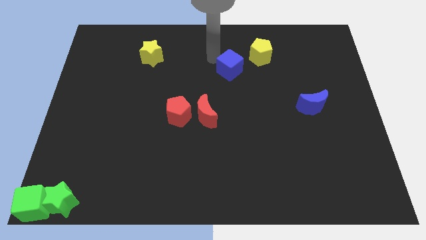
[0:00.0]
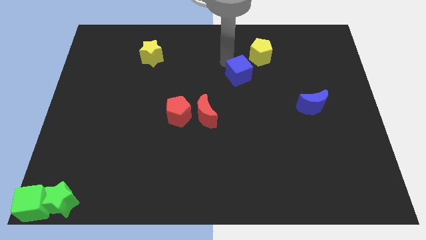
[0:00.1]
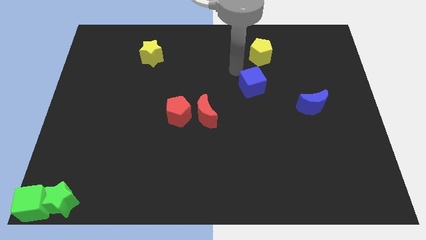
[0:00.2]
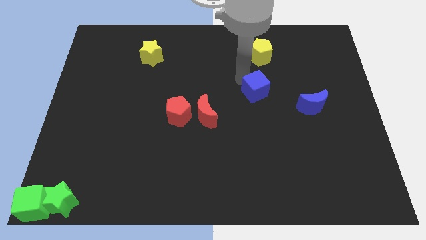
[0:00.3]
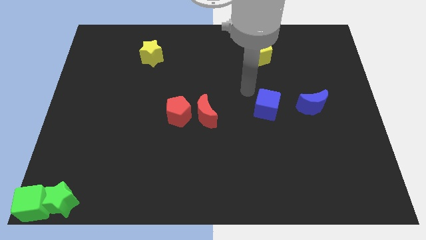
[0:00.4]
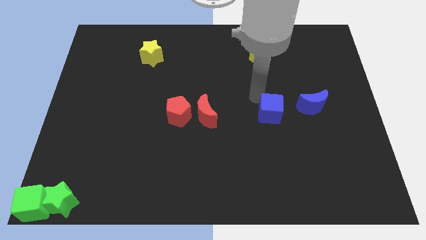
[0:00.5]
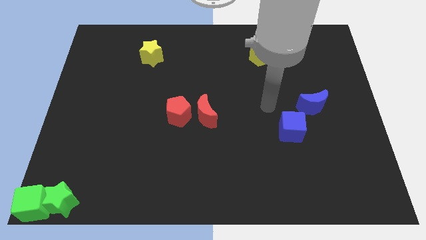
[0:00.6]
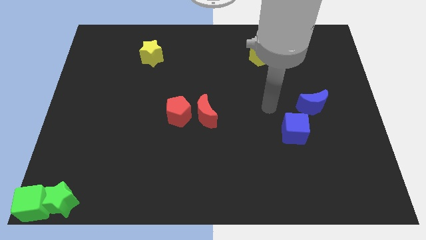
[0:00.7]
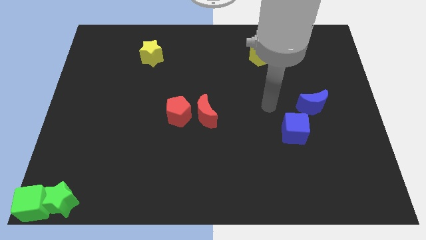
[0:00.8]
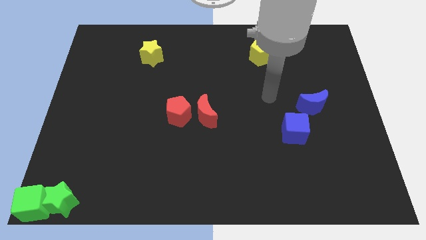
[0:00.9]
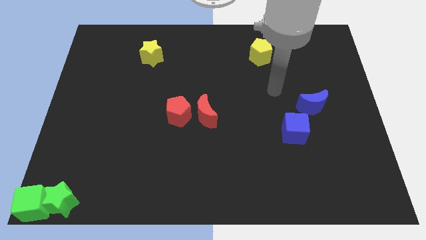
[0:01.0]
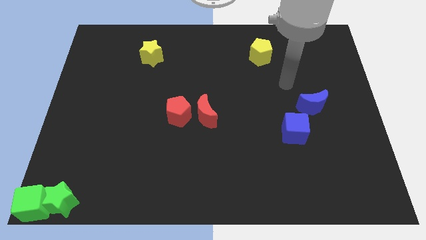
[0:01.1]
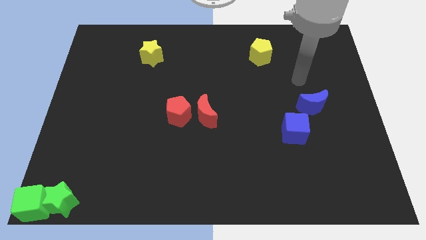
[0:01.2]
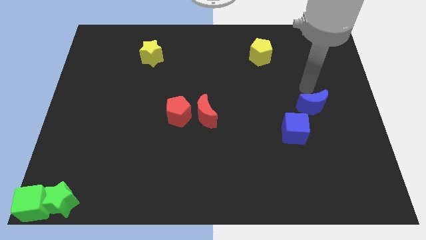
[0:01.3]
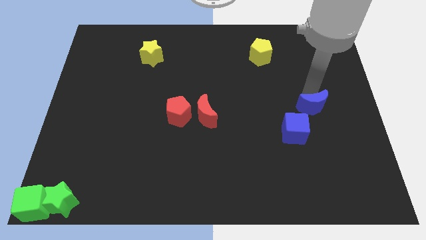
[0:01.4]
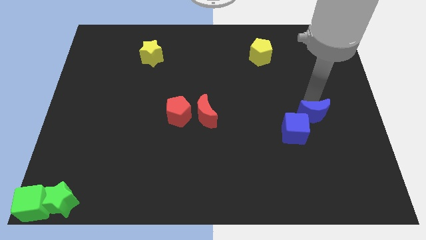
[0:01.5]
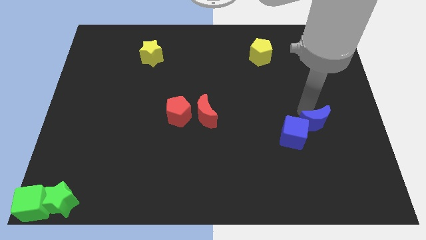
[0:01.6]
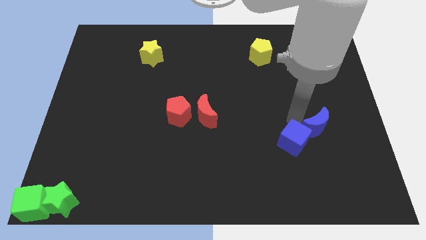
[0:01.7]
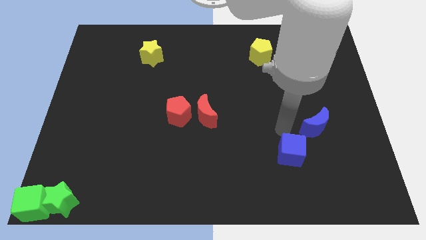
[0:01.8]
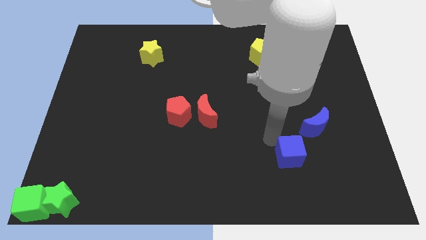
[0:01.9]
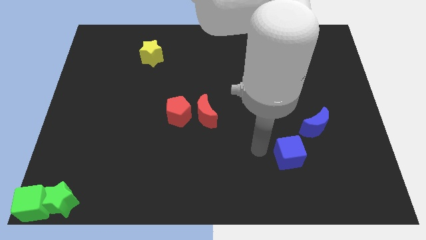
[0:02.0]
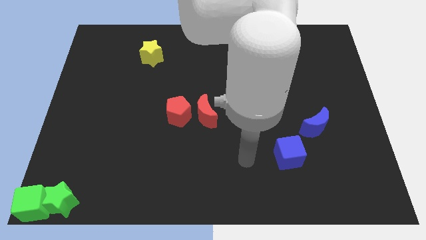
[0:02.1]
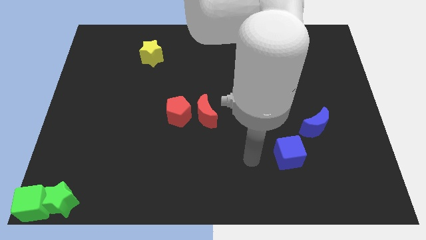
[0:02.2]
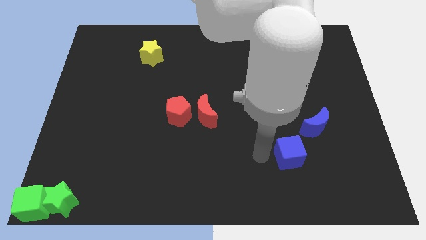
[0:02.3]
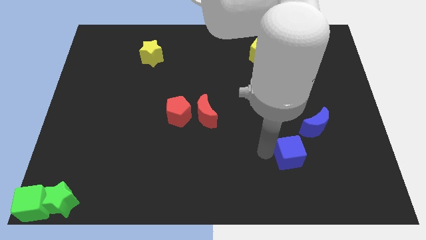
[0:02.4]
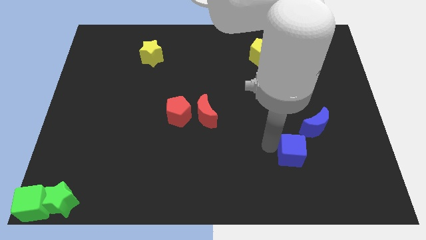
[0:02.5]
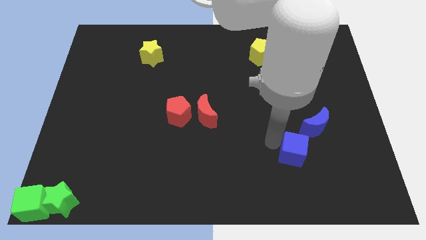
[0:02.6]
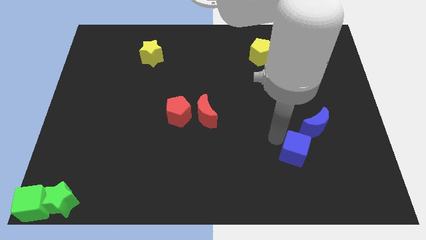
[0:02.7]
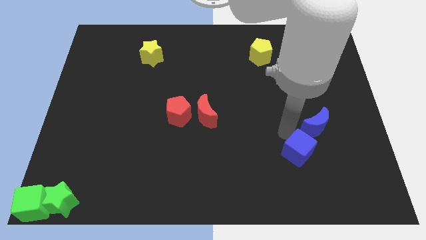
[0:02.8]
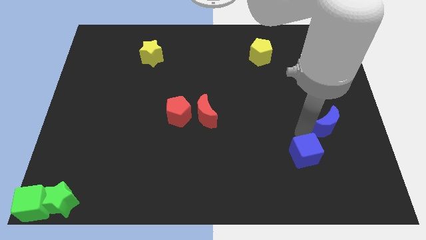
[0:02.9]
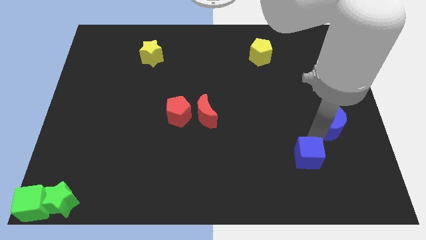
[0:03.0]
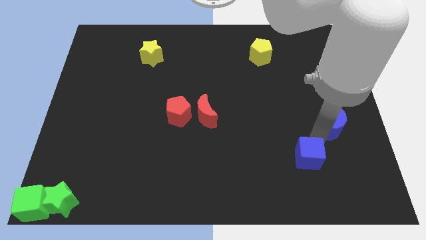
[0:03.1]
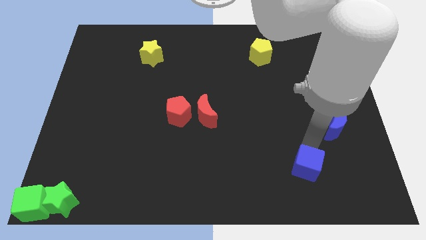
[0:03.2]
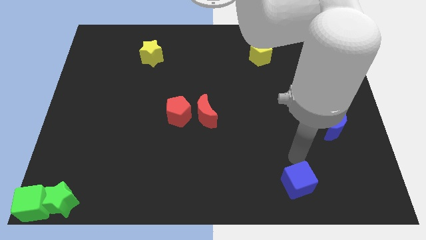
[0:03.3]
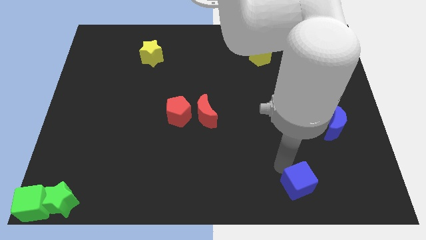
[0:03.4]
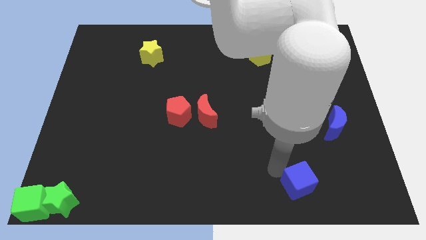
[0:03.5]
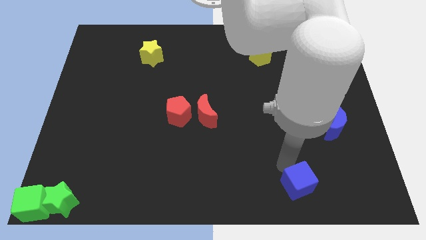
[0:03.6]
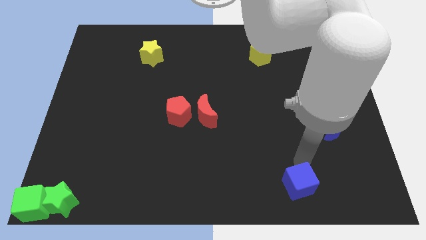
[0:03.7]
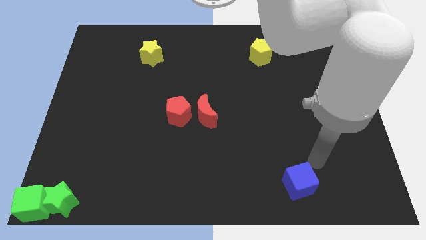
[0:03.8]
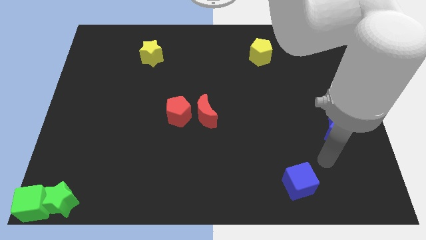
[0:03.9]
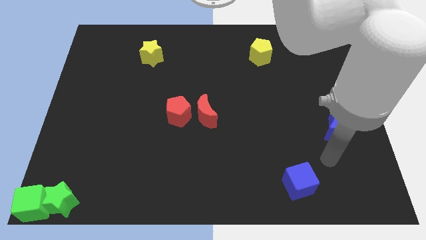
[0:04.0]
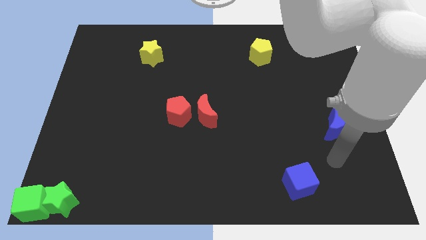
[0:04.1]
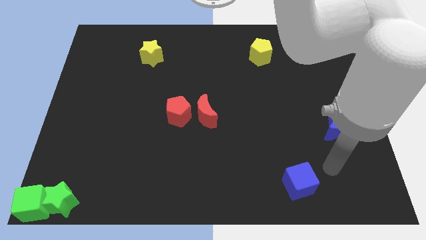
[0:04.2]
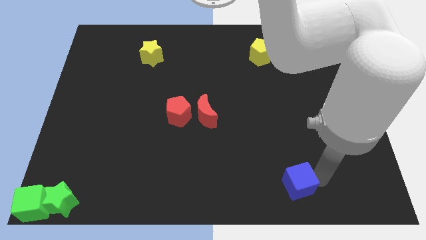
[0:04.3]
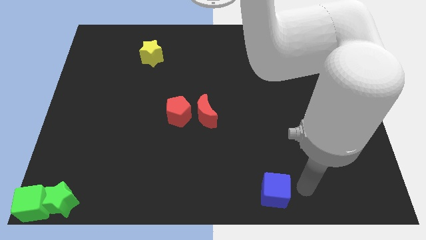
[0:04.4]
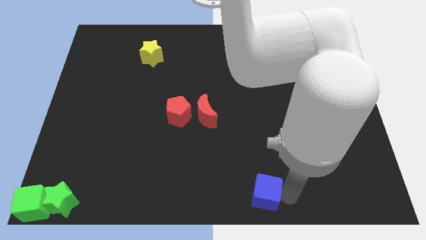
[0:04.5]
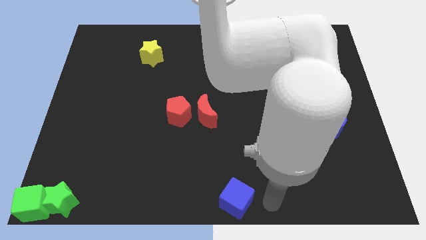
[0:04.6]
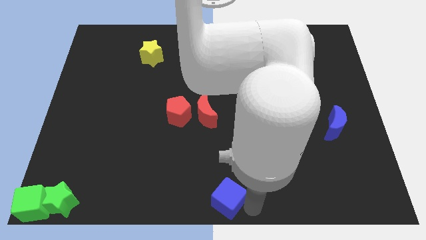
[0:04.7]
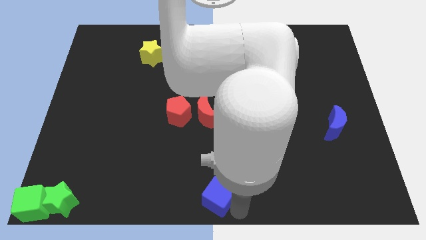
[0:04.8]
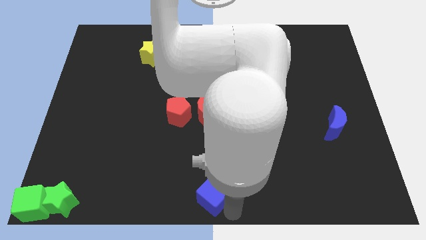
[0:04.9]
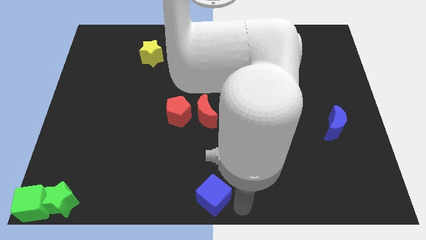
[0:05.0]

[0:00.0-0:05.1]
move the blue cube towards the bottom center of the board

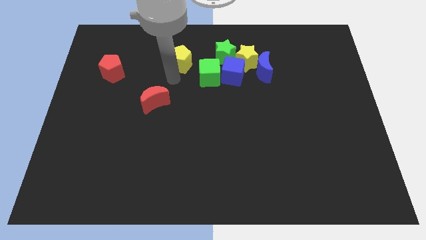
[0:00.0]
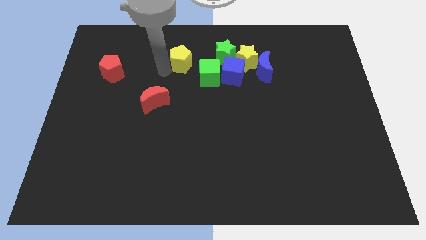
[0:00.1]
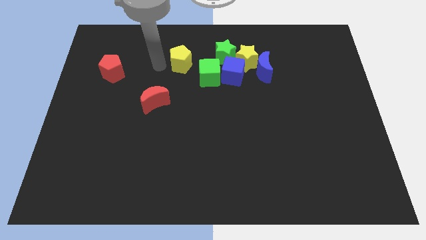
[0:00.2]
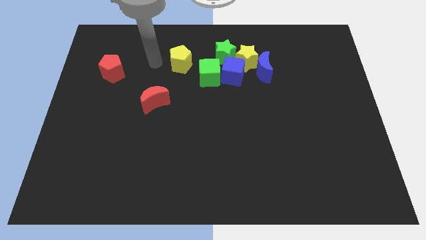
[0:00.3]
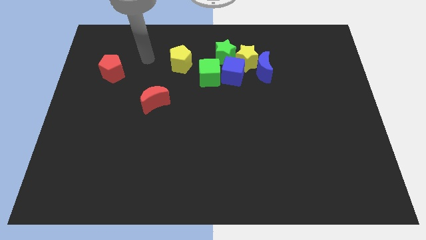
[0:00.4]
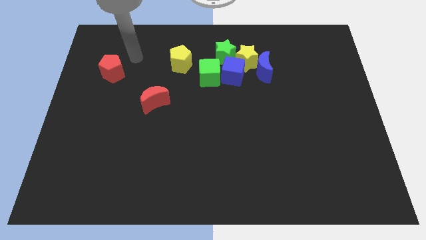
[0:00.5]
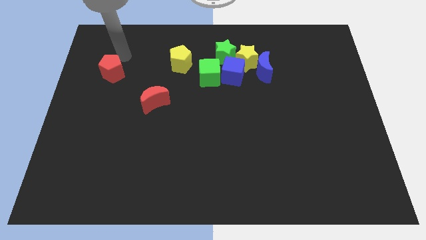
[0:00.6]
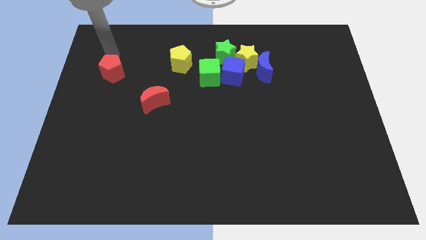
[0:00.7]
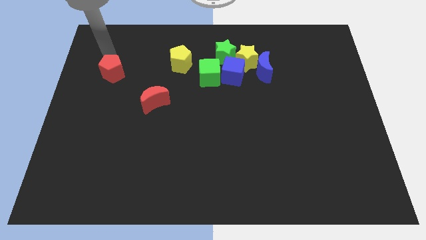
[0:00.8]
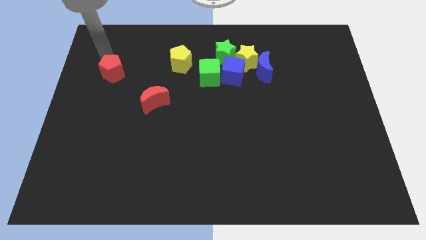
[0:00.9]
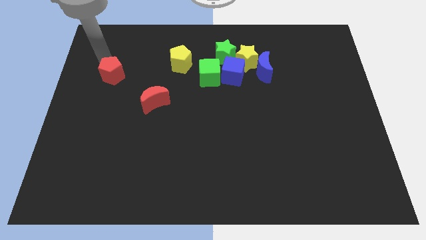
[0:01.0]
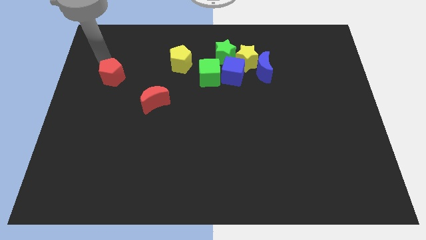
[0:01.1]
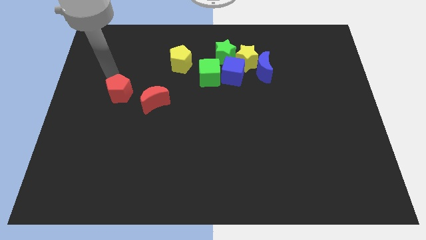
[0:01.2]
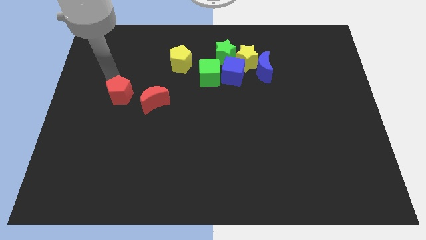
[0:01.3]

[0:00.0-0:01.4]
push the red pentagon towards the left top of the red moon

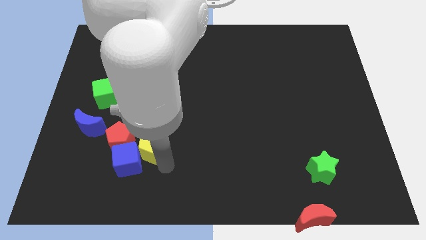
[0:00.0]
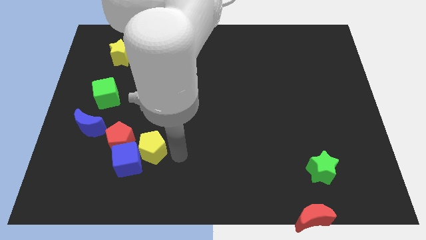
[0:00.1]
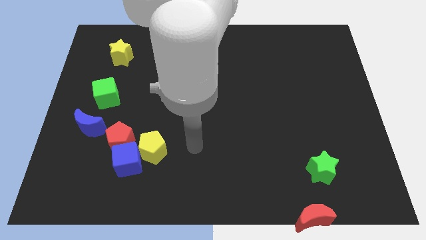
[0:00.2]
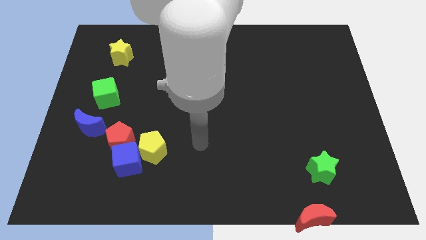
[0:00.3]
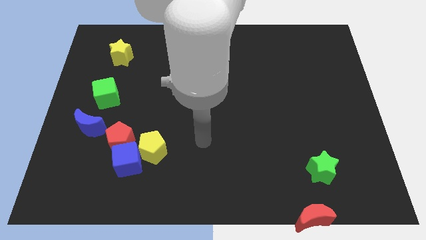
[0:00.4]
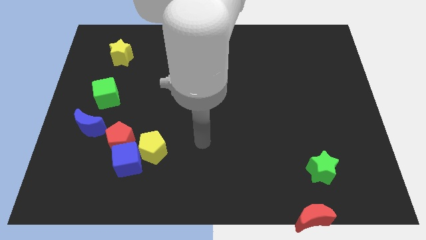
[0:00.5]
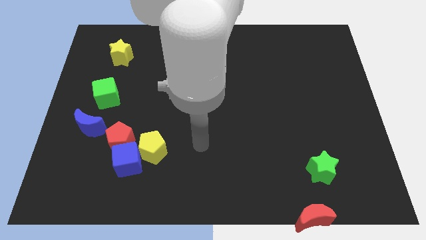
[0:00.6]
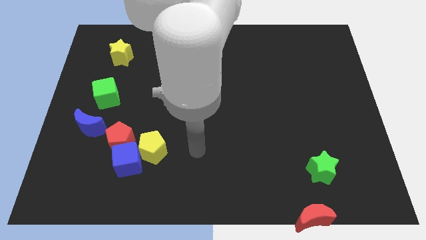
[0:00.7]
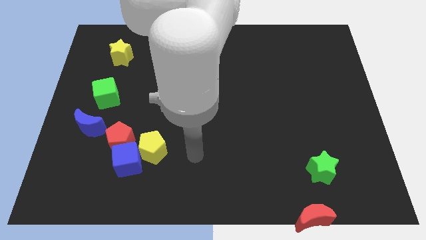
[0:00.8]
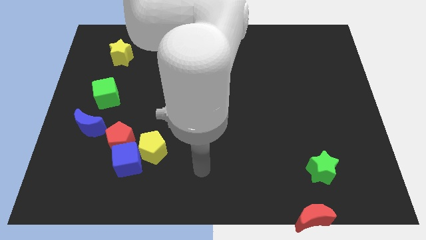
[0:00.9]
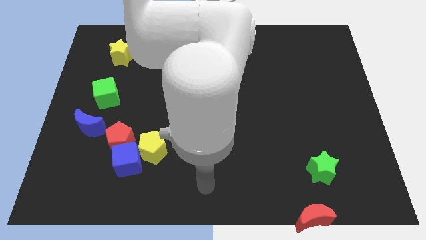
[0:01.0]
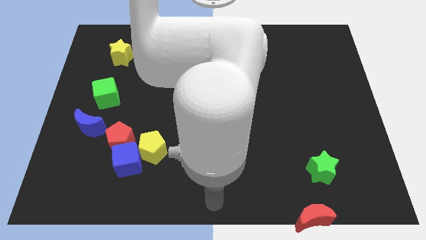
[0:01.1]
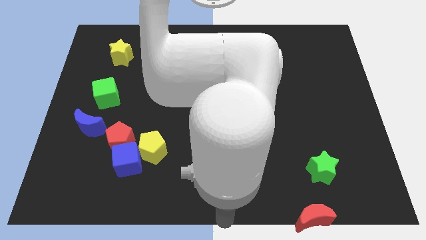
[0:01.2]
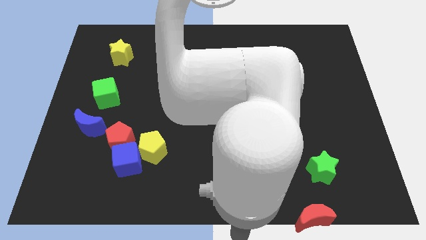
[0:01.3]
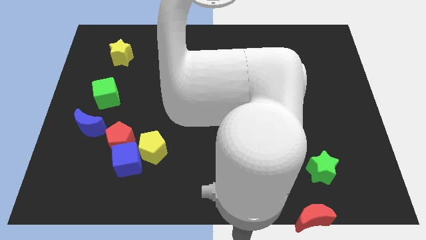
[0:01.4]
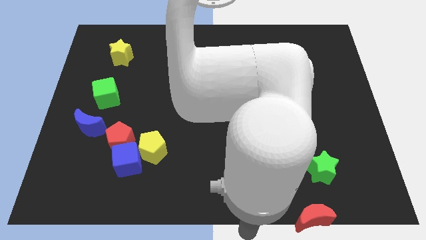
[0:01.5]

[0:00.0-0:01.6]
move your arm away from the yellow pentagon

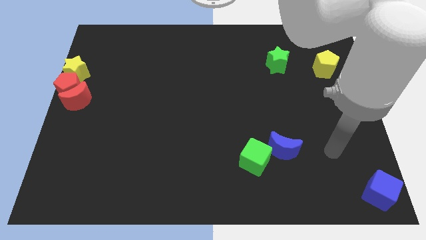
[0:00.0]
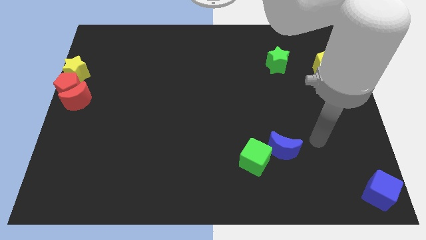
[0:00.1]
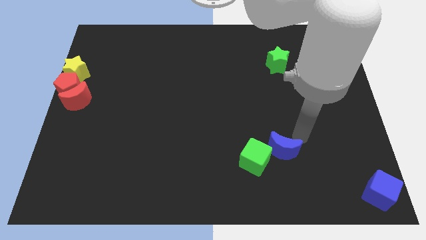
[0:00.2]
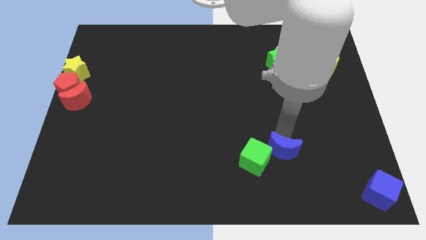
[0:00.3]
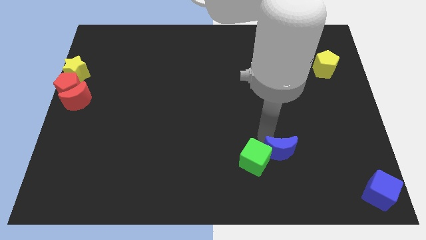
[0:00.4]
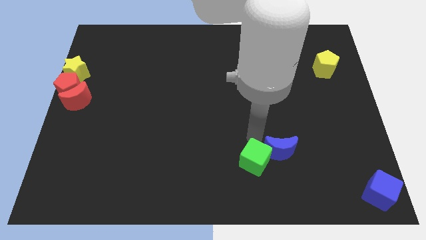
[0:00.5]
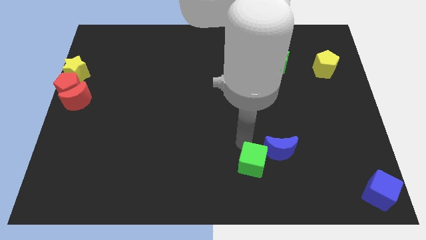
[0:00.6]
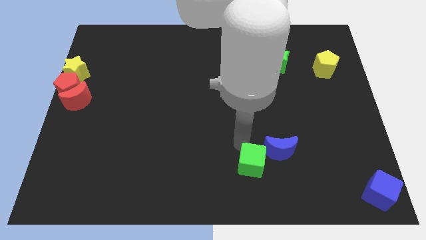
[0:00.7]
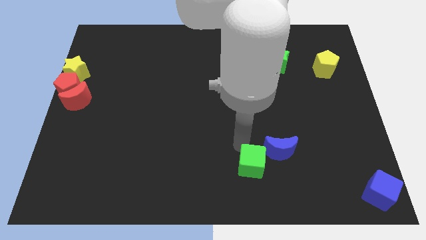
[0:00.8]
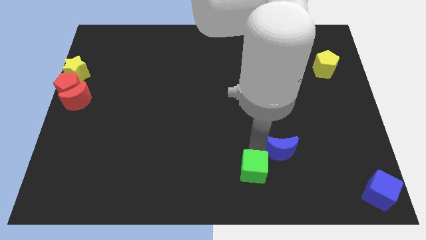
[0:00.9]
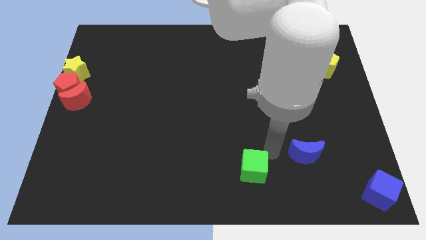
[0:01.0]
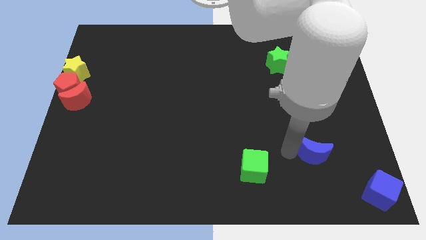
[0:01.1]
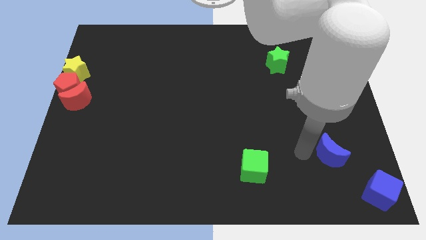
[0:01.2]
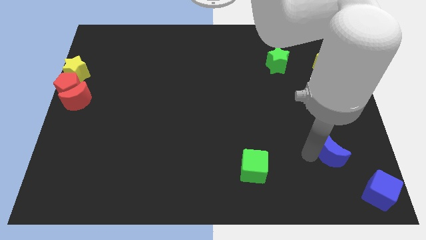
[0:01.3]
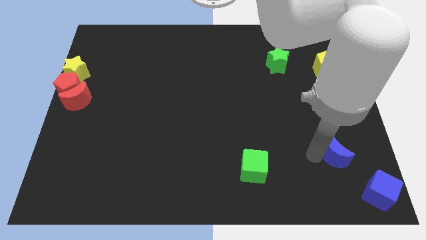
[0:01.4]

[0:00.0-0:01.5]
move the blue moon away from the green cube
